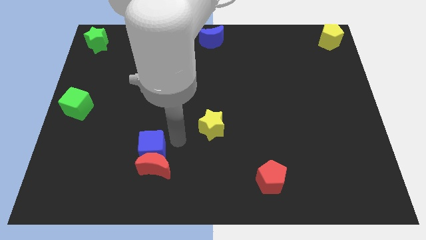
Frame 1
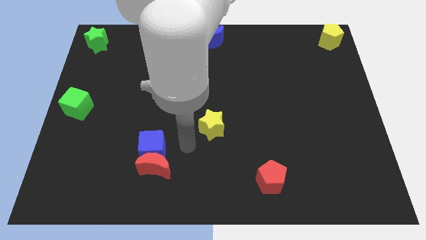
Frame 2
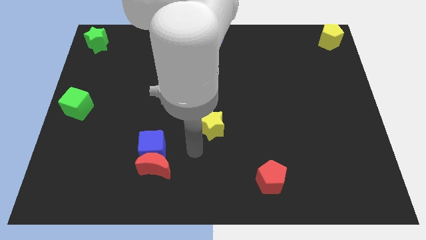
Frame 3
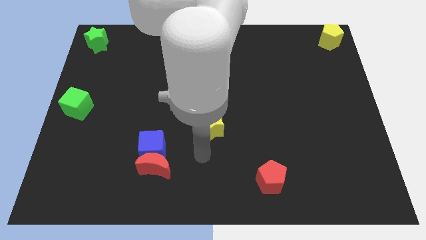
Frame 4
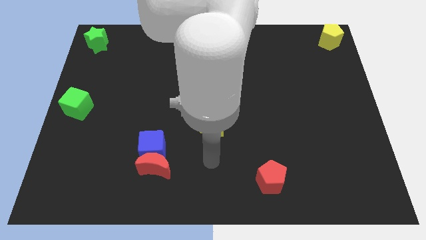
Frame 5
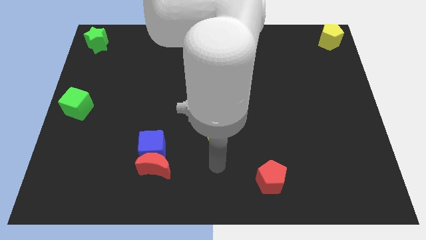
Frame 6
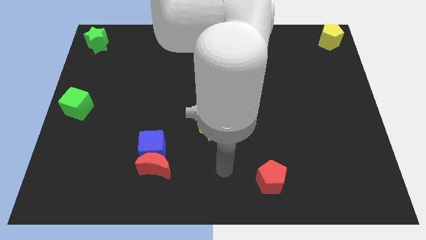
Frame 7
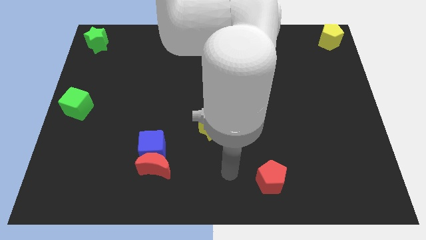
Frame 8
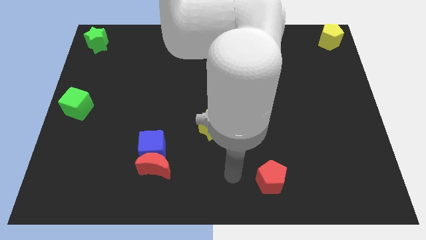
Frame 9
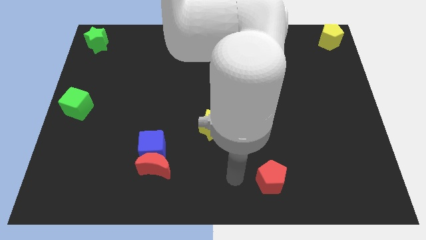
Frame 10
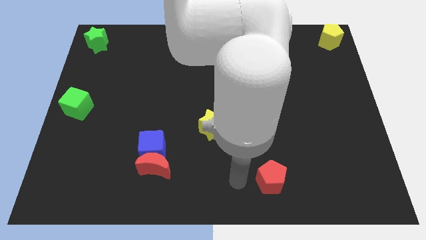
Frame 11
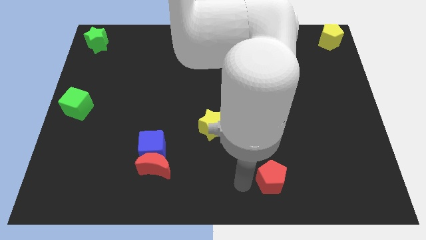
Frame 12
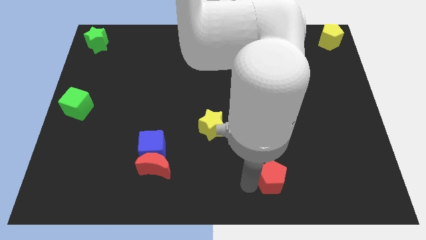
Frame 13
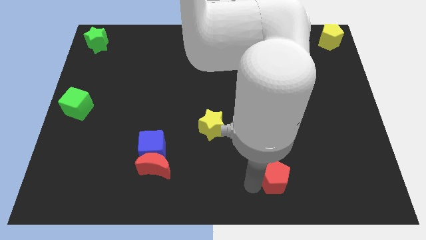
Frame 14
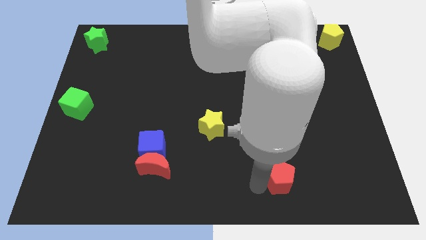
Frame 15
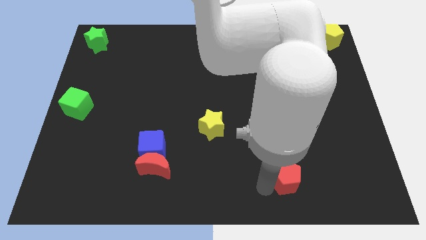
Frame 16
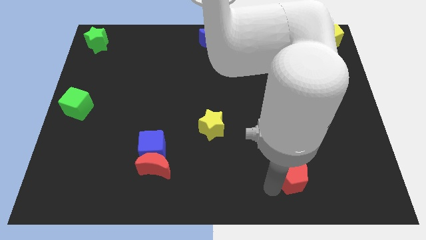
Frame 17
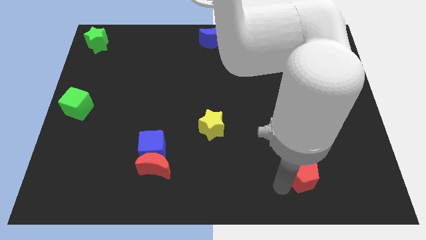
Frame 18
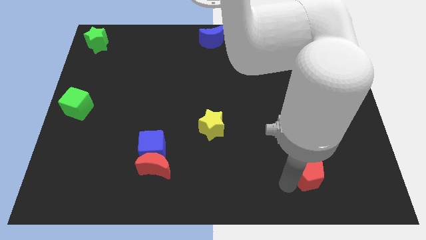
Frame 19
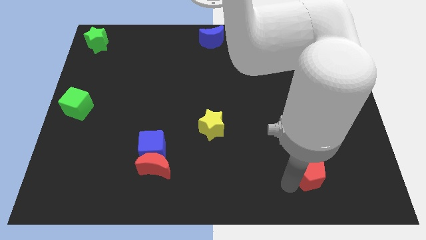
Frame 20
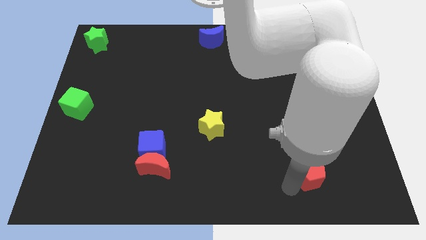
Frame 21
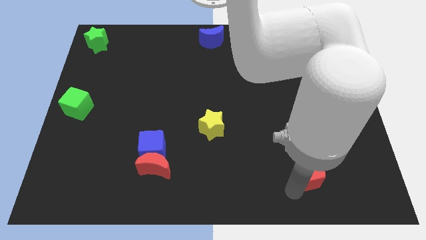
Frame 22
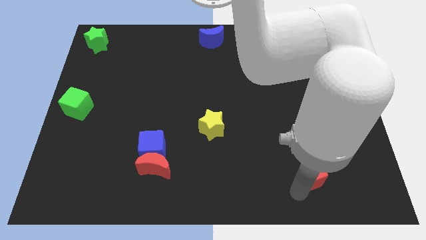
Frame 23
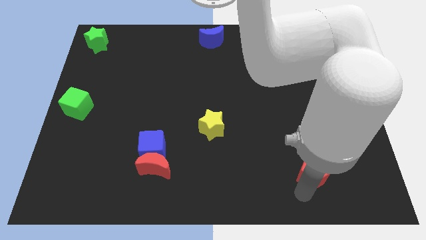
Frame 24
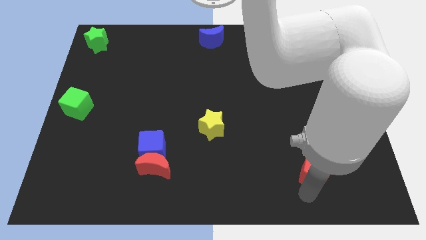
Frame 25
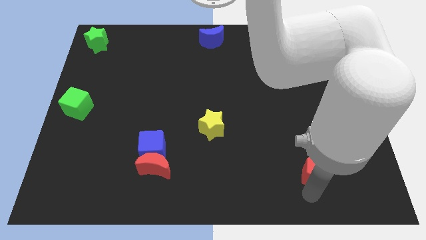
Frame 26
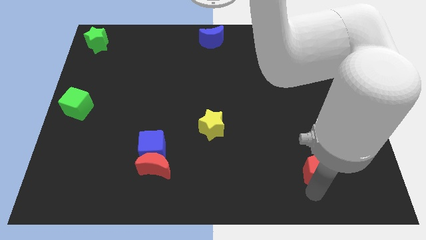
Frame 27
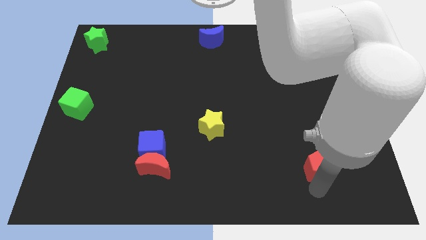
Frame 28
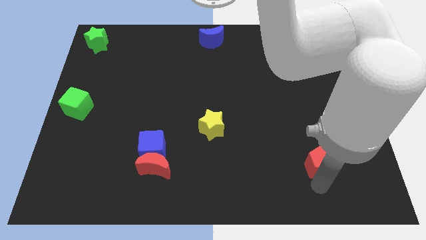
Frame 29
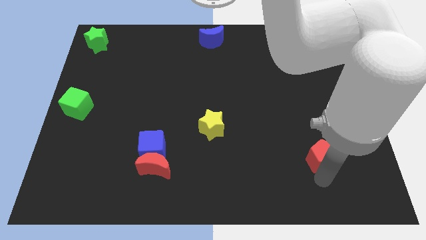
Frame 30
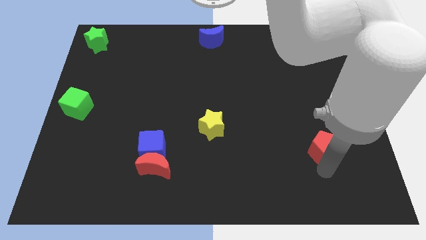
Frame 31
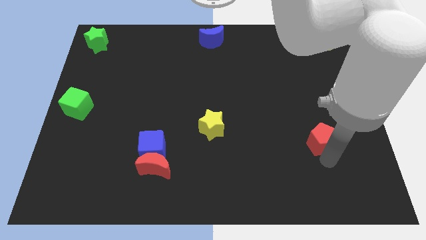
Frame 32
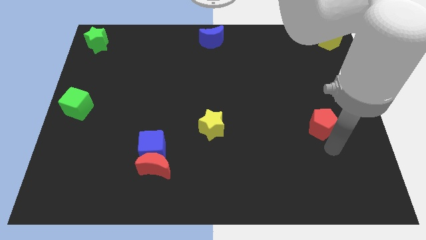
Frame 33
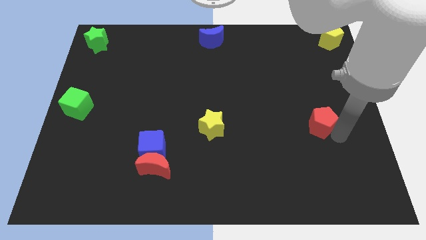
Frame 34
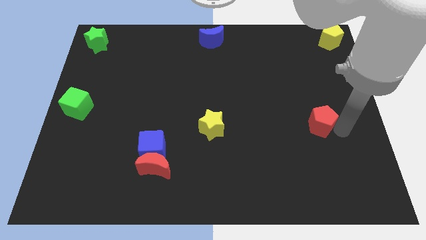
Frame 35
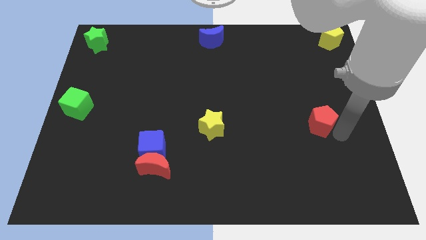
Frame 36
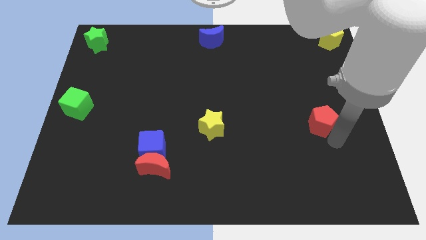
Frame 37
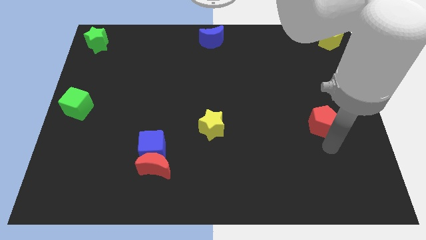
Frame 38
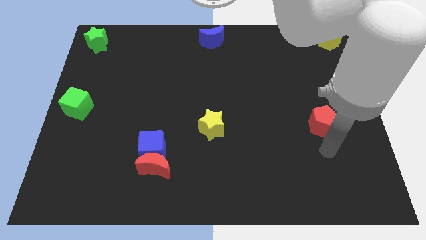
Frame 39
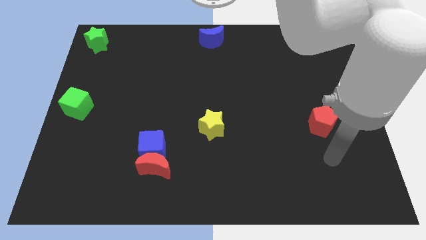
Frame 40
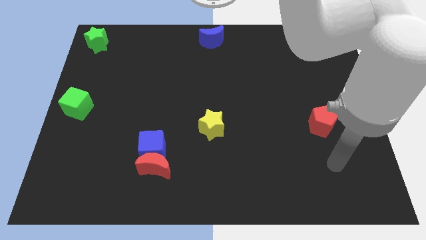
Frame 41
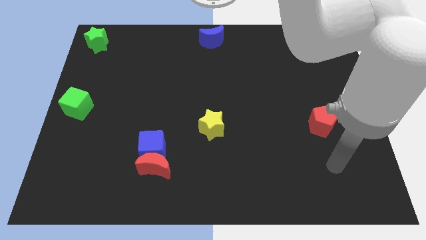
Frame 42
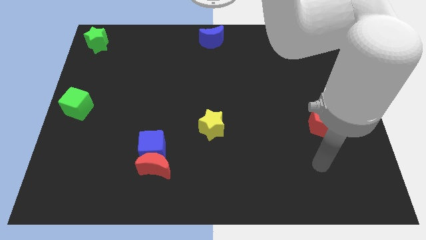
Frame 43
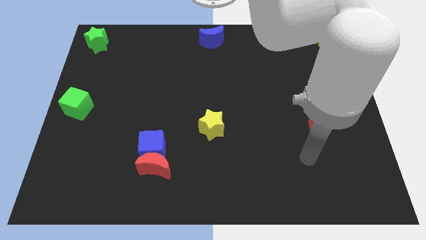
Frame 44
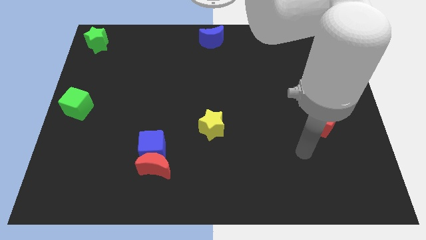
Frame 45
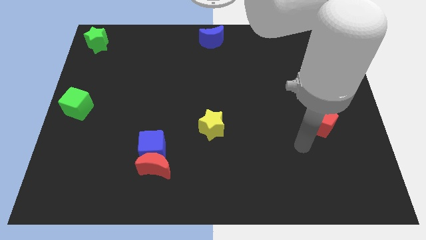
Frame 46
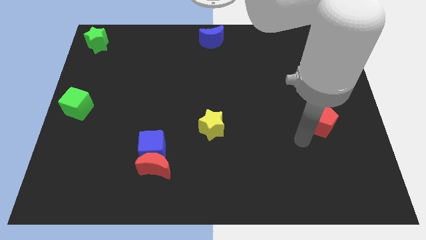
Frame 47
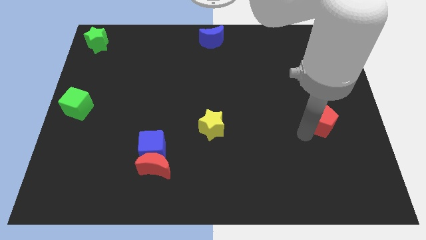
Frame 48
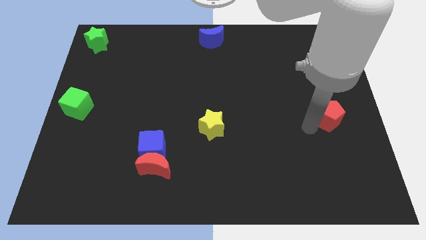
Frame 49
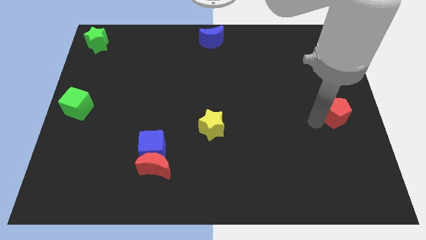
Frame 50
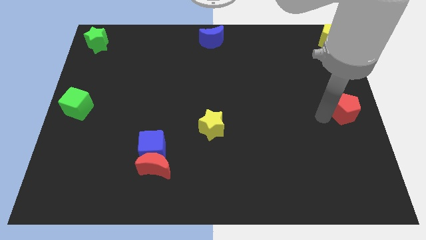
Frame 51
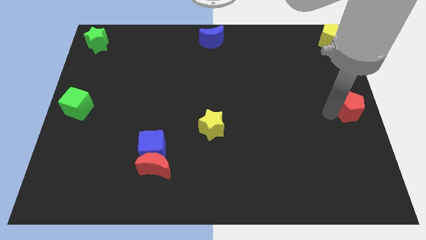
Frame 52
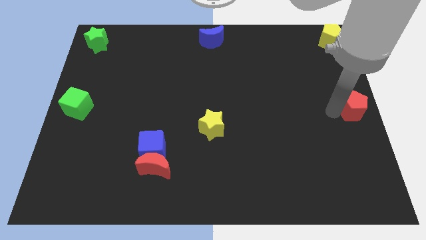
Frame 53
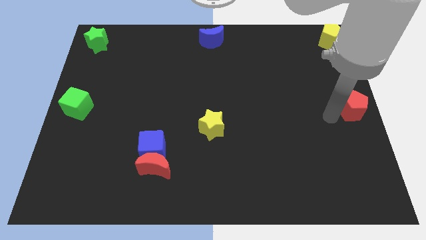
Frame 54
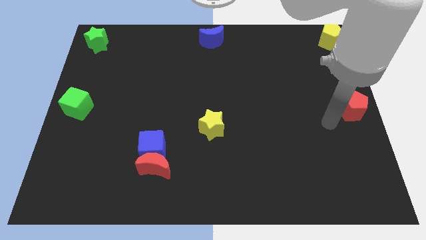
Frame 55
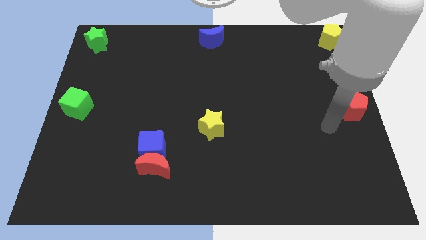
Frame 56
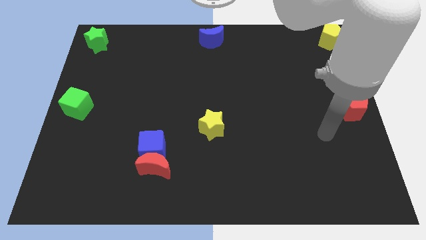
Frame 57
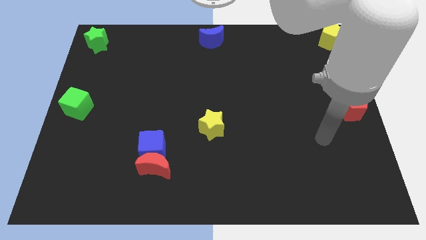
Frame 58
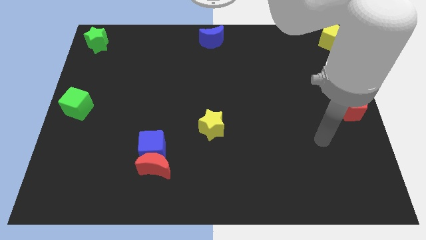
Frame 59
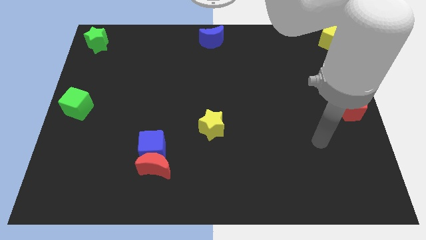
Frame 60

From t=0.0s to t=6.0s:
push the red pentagon upward

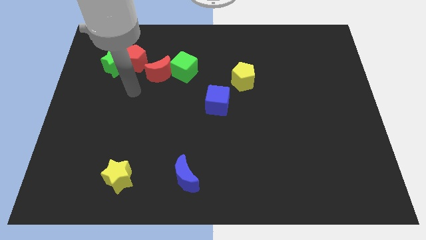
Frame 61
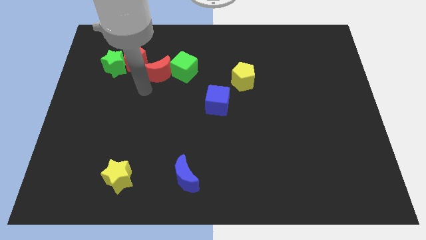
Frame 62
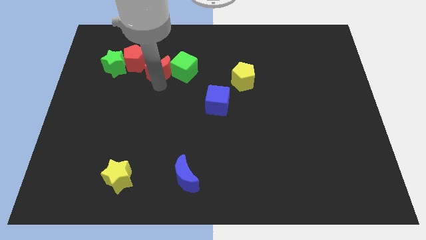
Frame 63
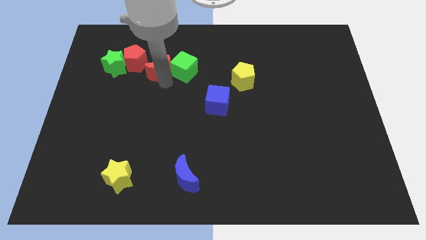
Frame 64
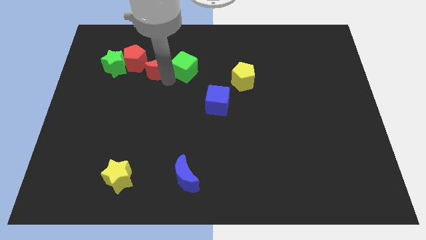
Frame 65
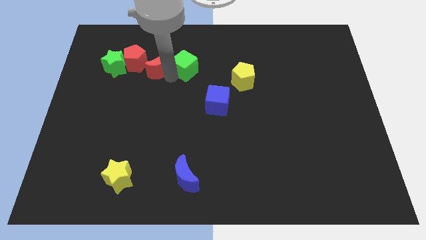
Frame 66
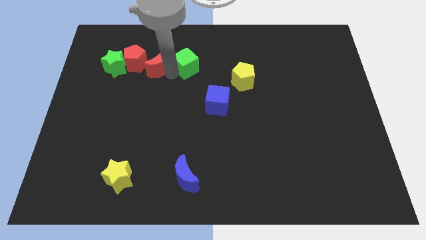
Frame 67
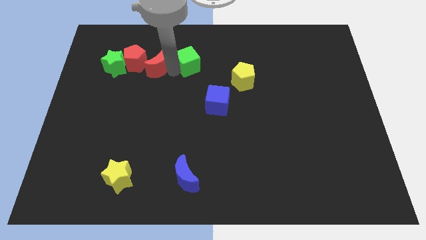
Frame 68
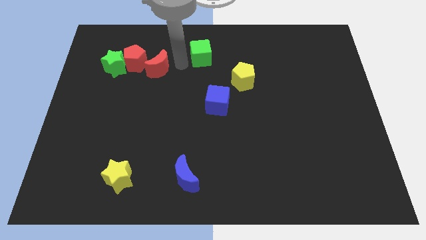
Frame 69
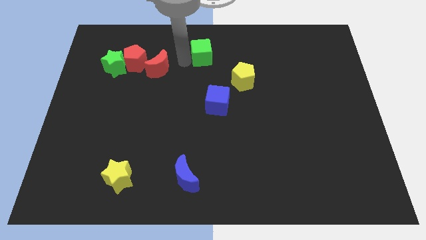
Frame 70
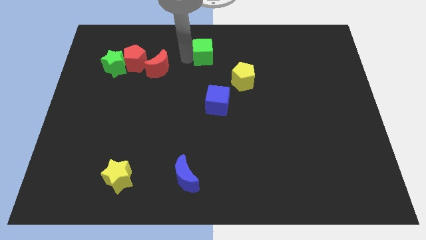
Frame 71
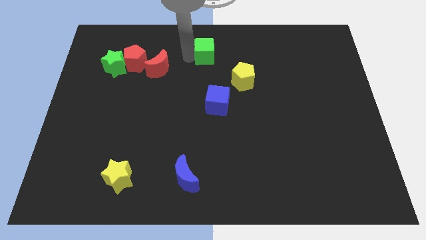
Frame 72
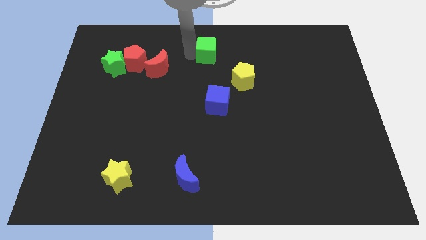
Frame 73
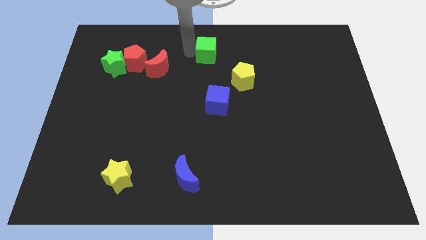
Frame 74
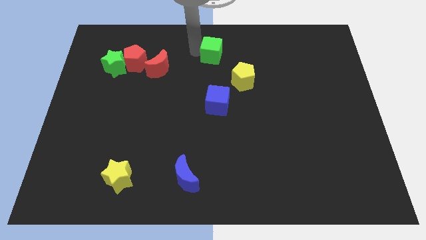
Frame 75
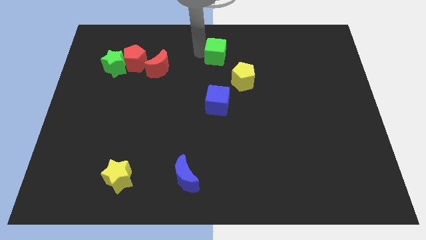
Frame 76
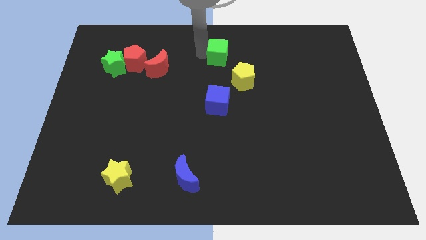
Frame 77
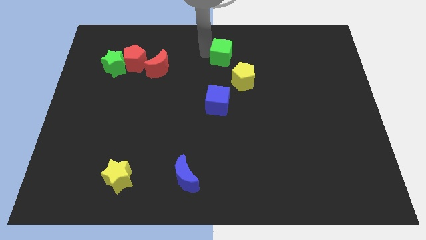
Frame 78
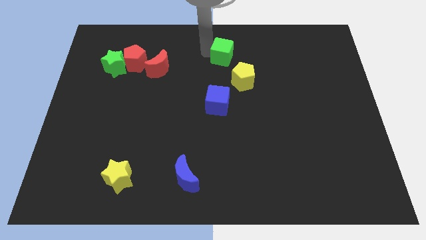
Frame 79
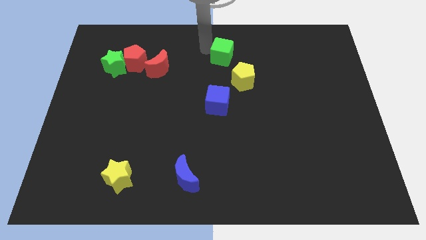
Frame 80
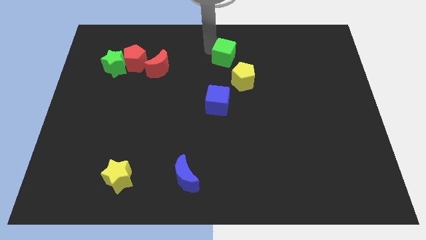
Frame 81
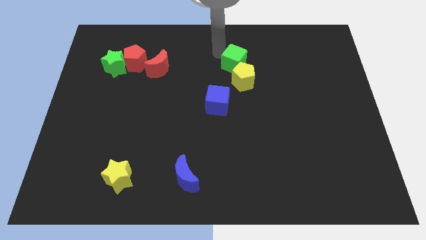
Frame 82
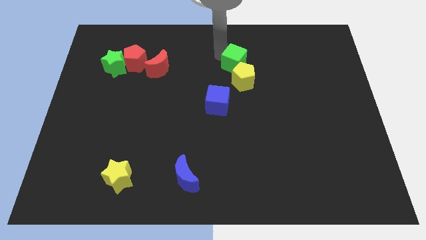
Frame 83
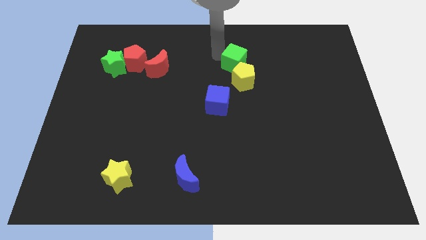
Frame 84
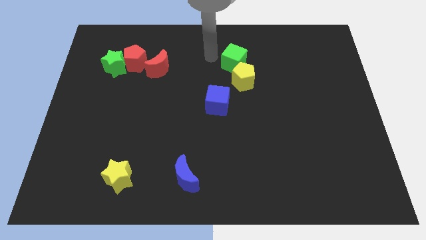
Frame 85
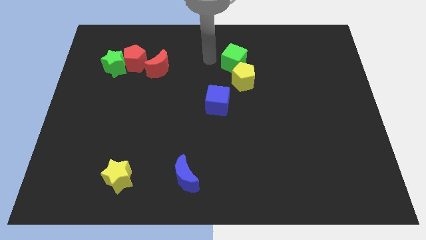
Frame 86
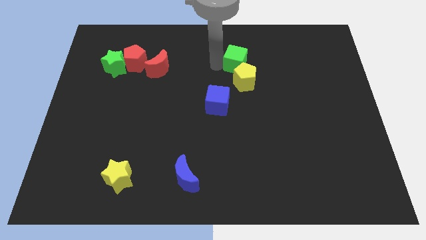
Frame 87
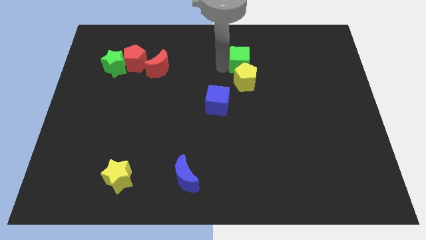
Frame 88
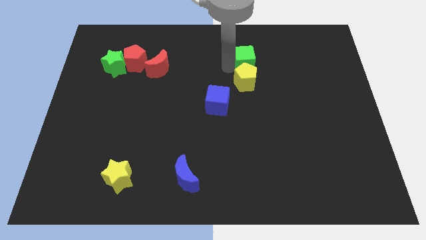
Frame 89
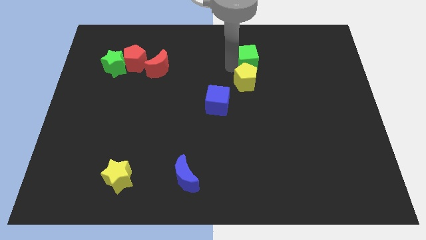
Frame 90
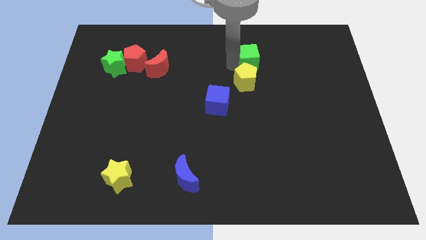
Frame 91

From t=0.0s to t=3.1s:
push the green cube to the top of the yellow pentagon
